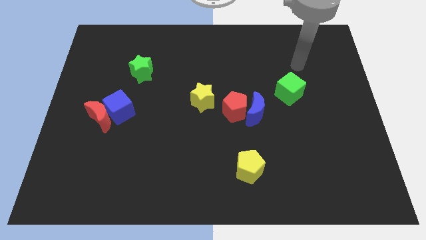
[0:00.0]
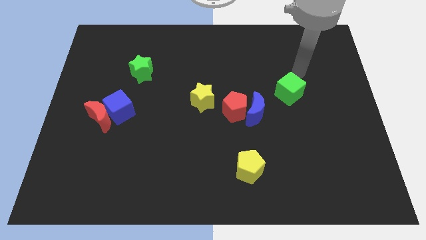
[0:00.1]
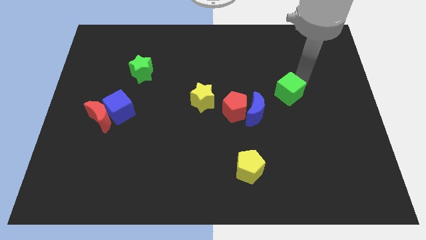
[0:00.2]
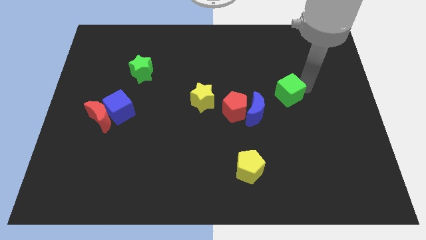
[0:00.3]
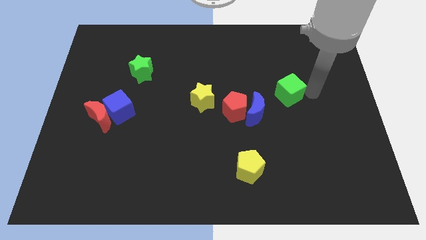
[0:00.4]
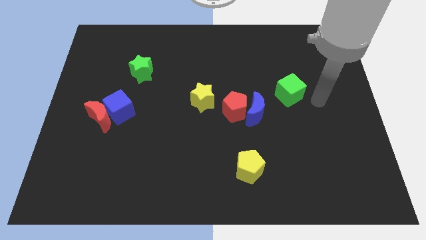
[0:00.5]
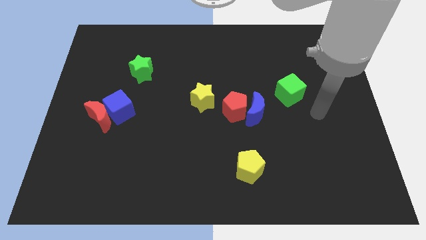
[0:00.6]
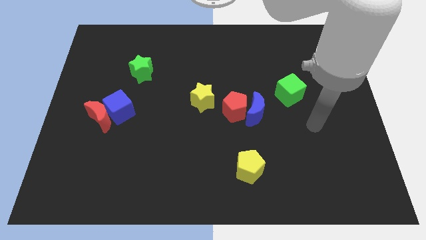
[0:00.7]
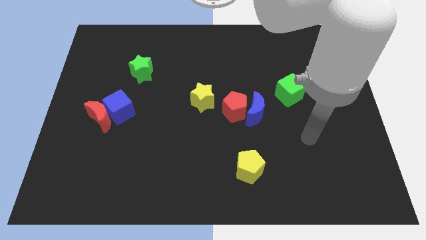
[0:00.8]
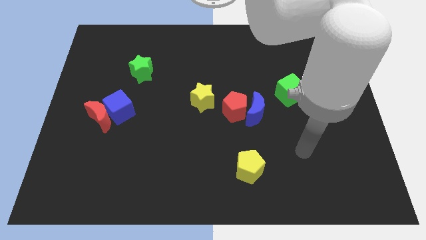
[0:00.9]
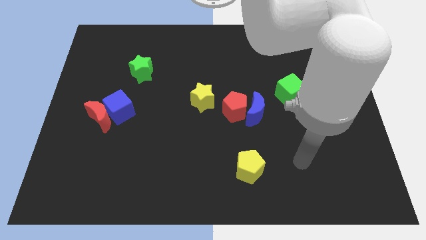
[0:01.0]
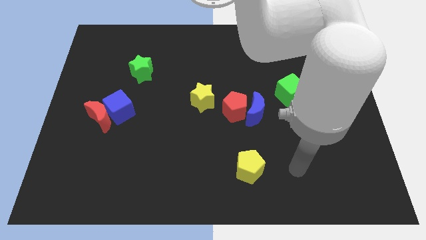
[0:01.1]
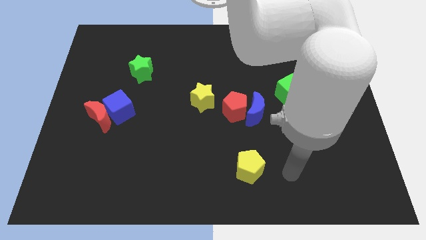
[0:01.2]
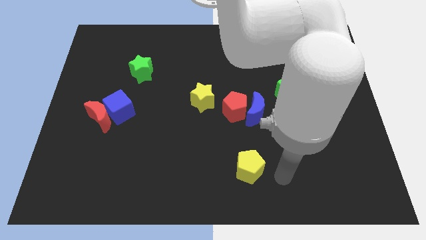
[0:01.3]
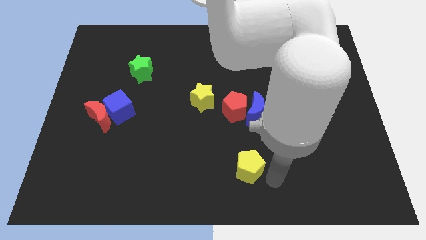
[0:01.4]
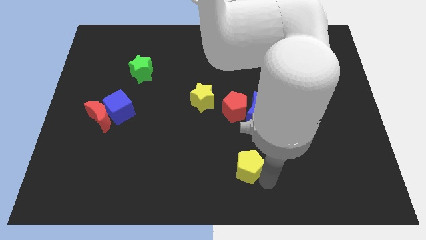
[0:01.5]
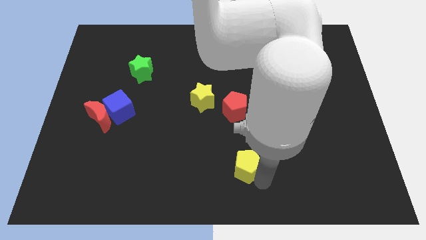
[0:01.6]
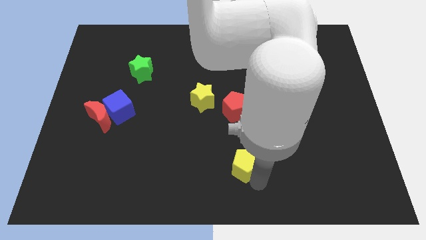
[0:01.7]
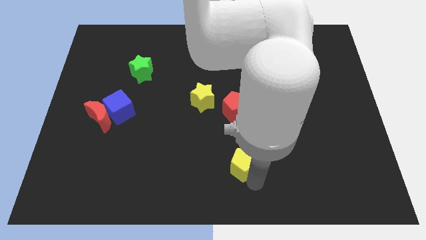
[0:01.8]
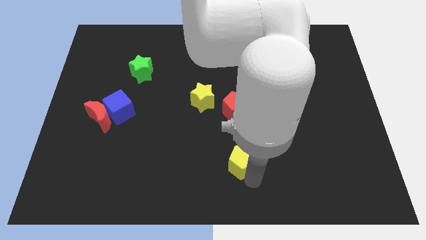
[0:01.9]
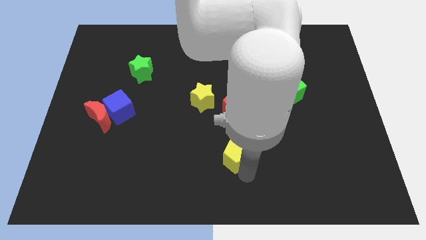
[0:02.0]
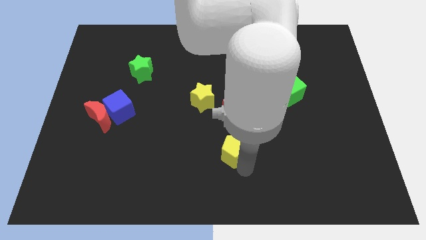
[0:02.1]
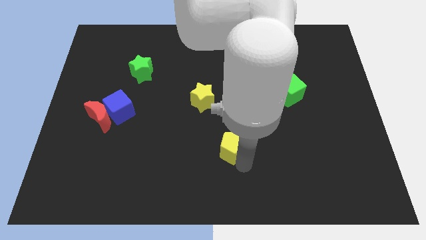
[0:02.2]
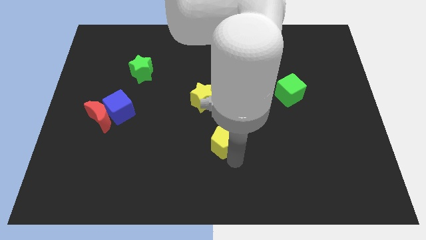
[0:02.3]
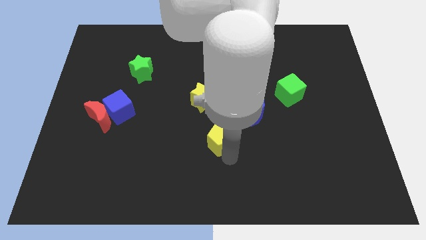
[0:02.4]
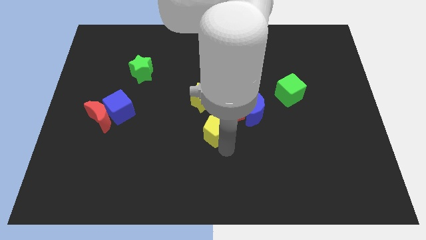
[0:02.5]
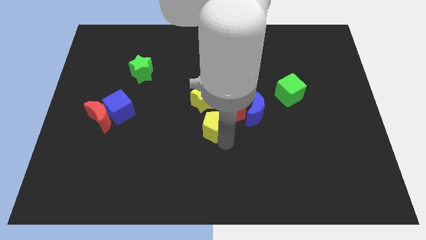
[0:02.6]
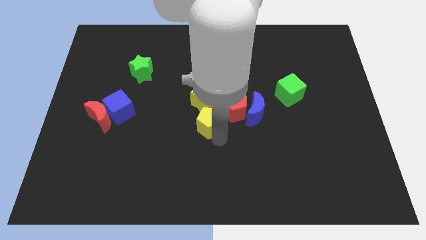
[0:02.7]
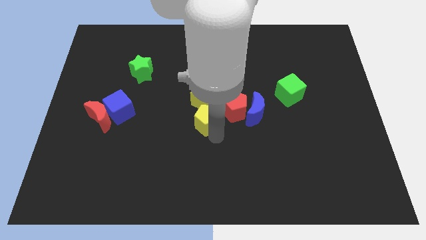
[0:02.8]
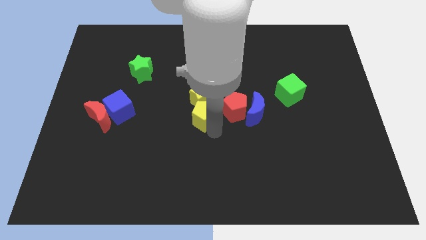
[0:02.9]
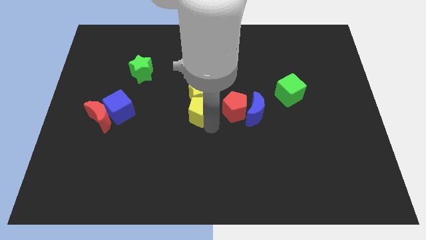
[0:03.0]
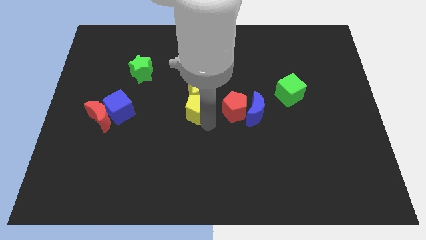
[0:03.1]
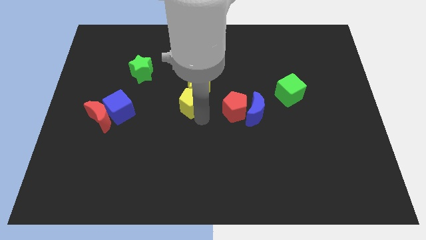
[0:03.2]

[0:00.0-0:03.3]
move the yellow pentagon into yellow star

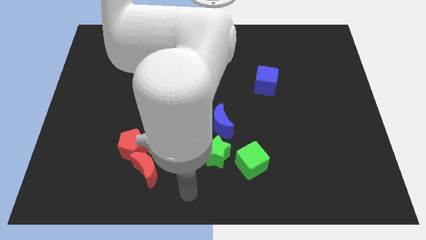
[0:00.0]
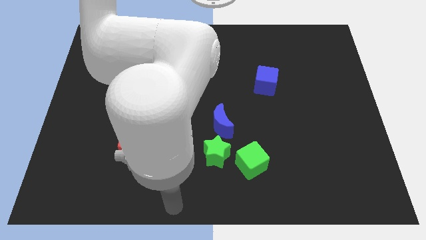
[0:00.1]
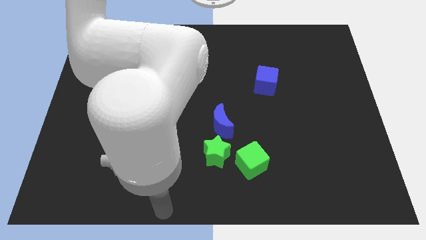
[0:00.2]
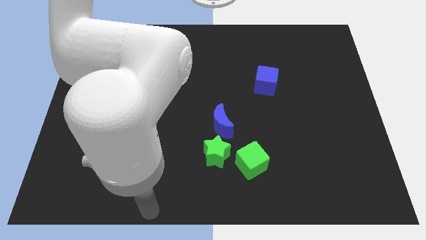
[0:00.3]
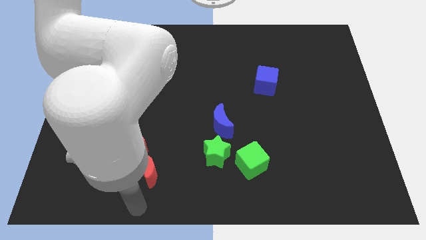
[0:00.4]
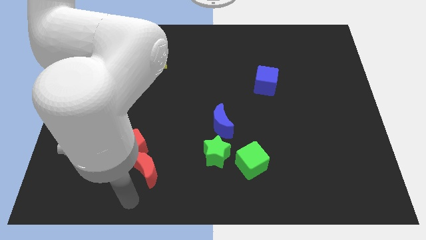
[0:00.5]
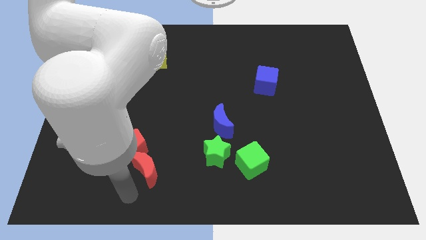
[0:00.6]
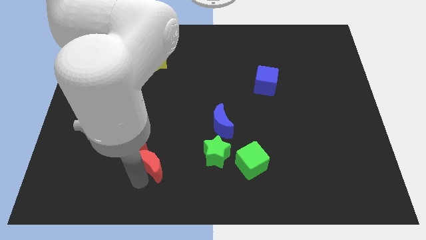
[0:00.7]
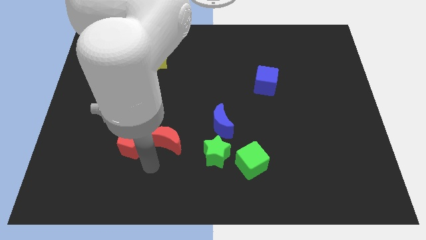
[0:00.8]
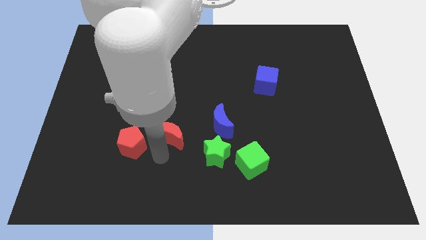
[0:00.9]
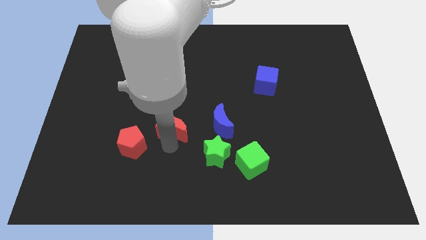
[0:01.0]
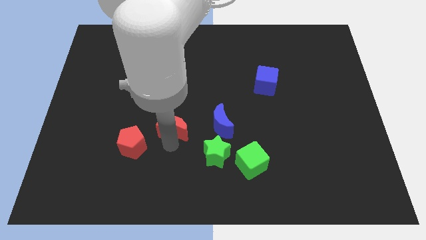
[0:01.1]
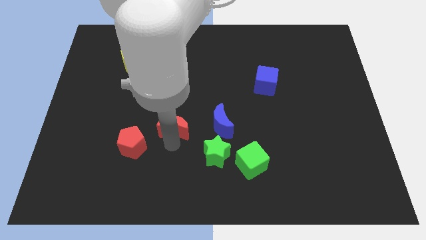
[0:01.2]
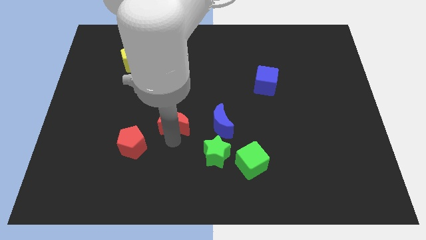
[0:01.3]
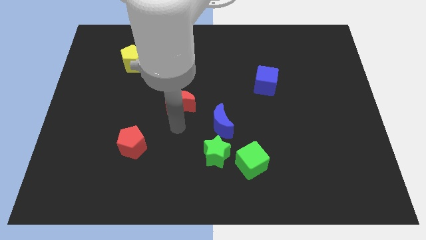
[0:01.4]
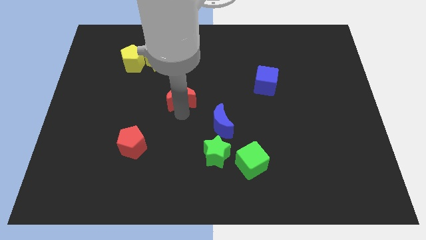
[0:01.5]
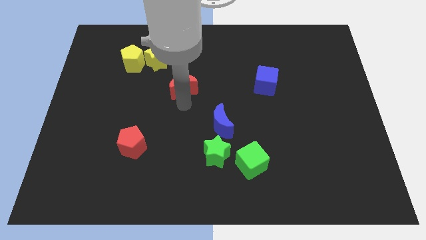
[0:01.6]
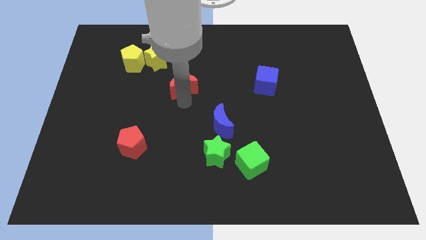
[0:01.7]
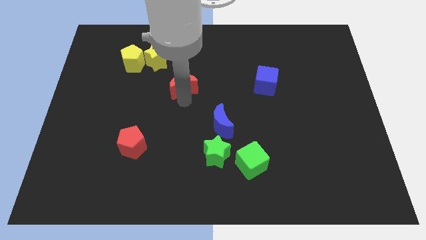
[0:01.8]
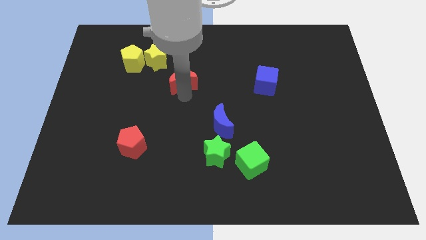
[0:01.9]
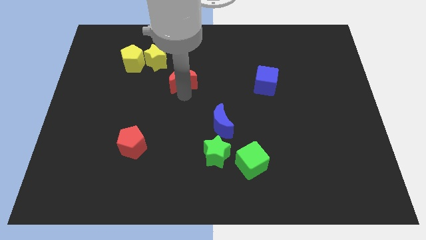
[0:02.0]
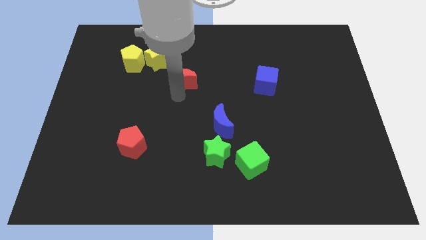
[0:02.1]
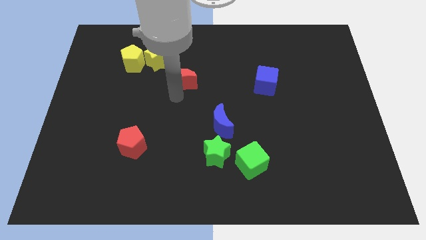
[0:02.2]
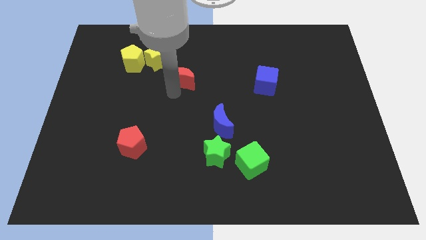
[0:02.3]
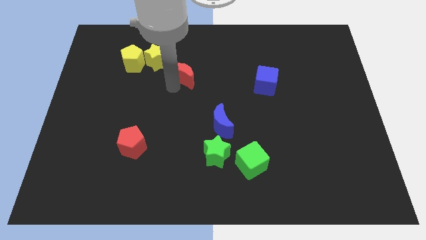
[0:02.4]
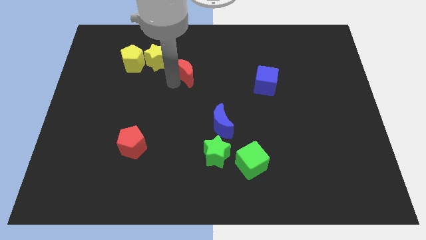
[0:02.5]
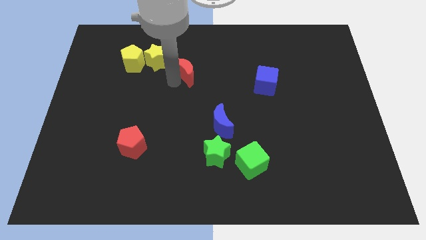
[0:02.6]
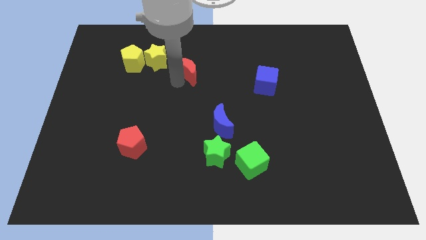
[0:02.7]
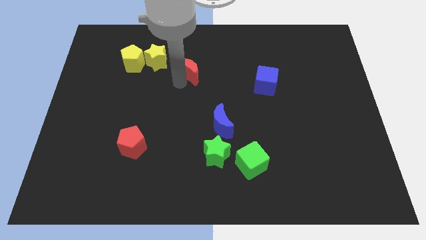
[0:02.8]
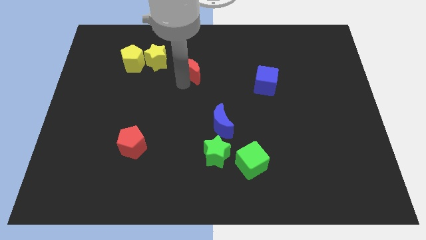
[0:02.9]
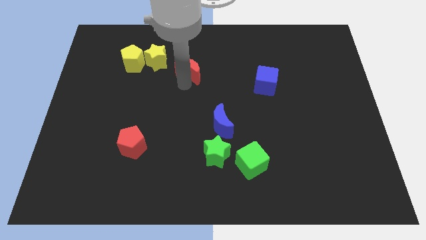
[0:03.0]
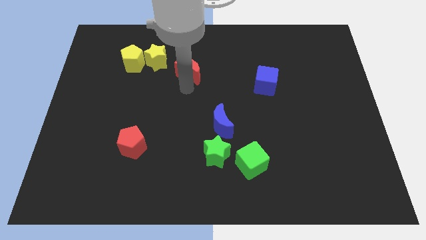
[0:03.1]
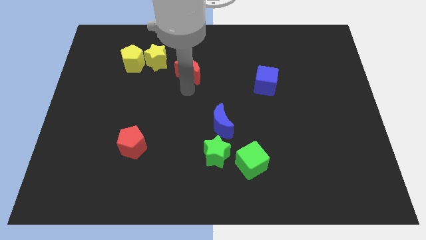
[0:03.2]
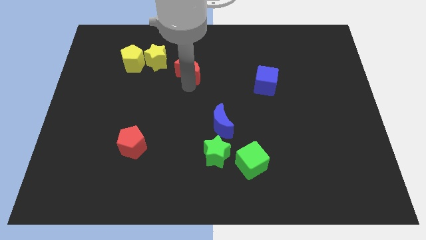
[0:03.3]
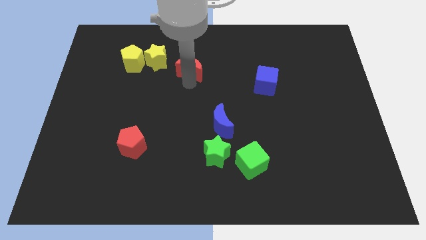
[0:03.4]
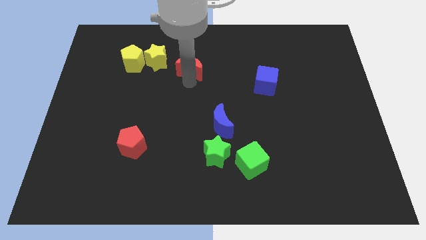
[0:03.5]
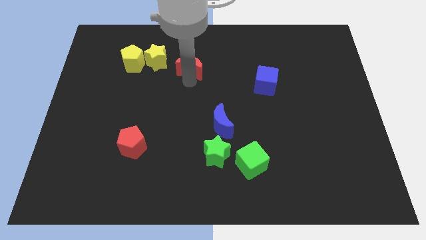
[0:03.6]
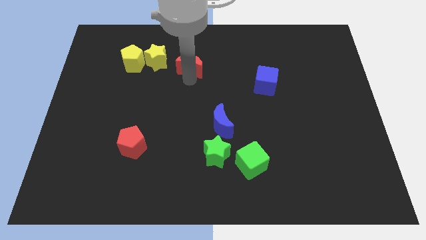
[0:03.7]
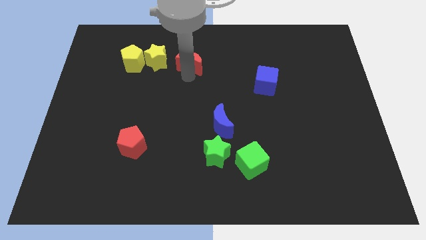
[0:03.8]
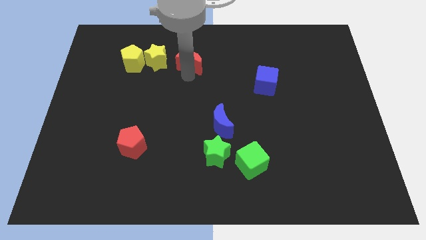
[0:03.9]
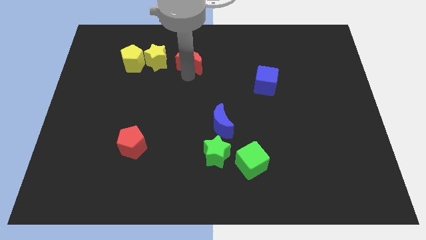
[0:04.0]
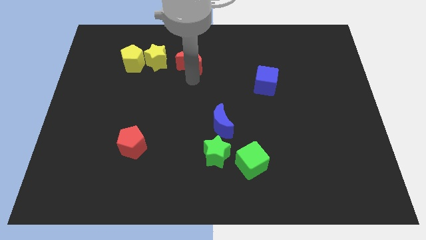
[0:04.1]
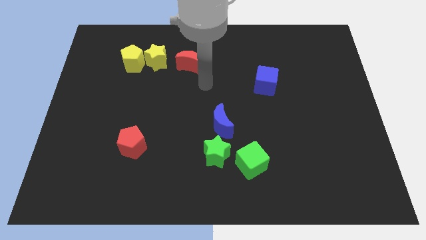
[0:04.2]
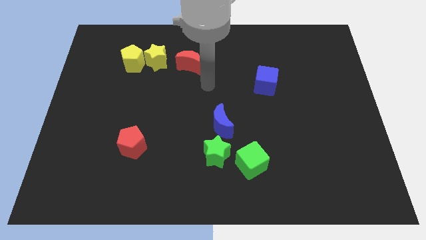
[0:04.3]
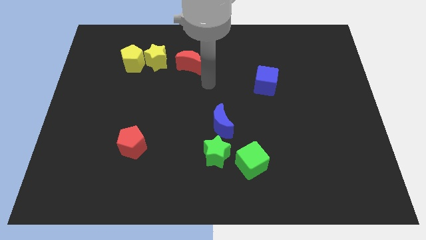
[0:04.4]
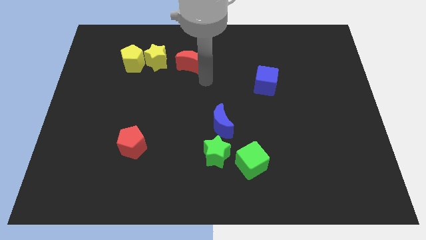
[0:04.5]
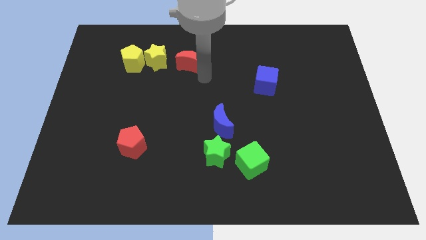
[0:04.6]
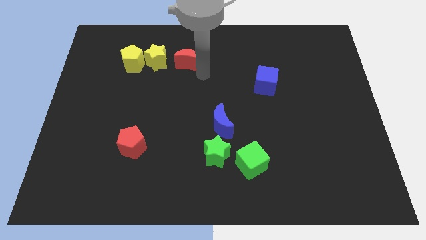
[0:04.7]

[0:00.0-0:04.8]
move the red moon right beside the yellow star

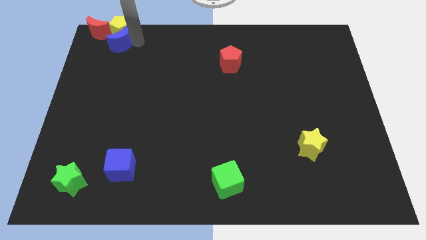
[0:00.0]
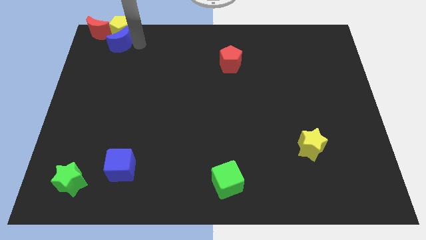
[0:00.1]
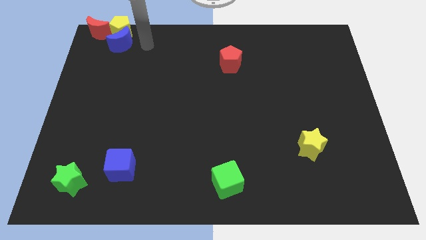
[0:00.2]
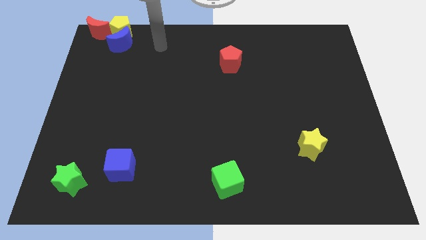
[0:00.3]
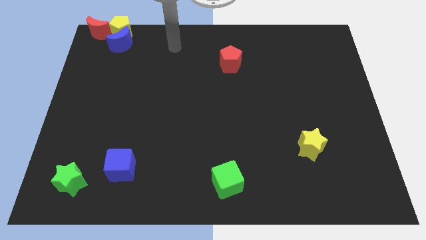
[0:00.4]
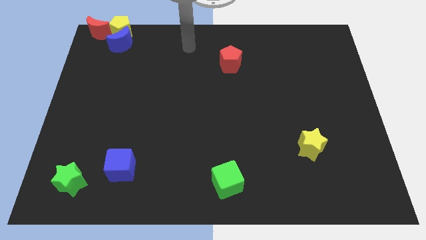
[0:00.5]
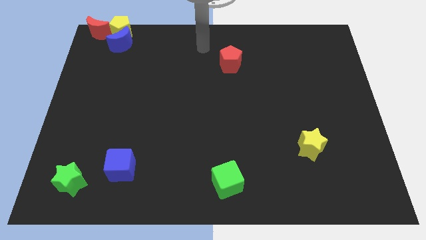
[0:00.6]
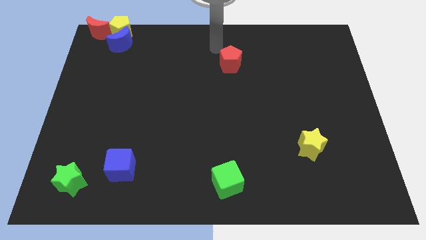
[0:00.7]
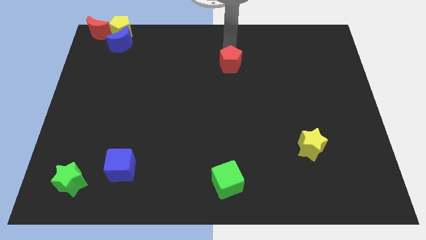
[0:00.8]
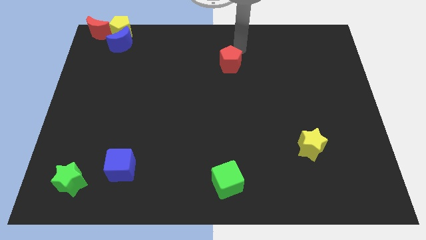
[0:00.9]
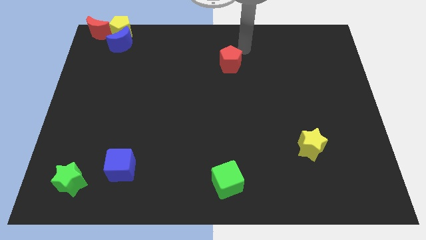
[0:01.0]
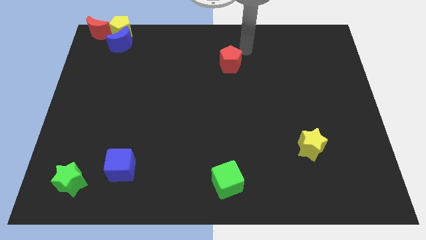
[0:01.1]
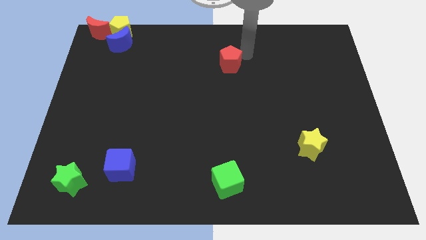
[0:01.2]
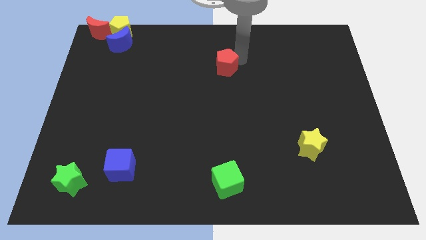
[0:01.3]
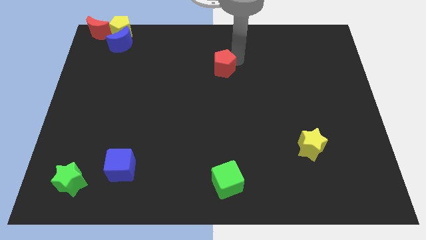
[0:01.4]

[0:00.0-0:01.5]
move your arm away from the blue moon
